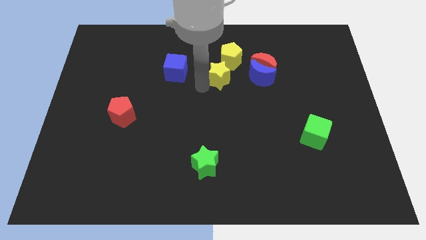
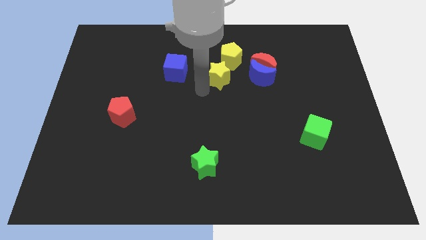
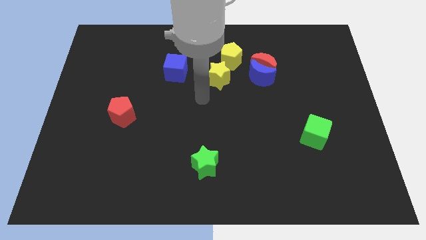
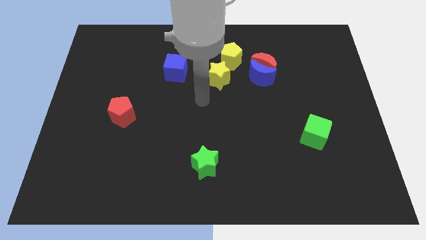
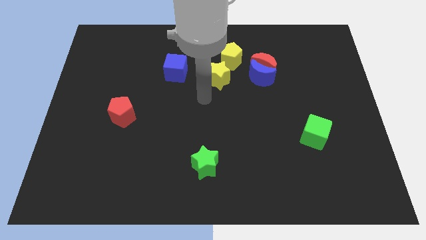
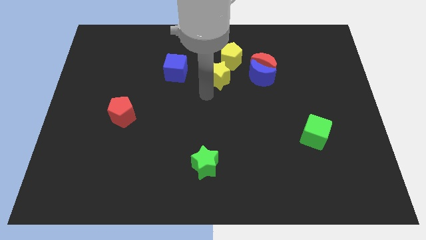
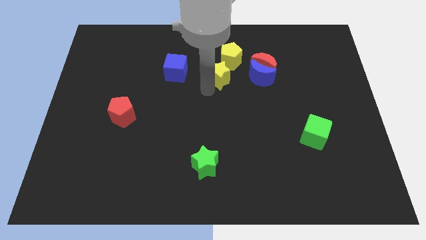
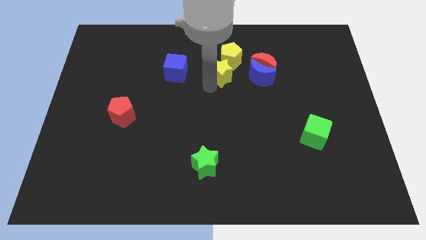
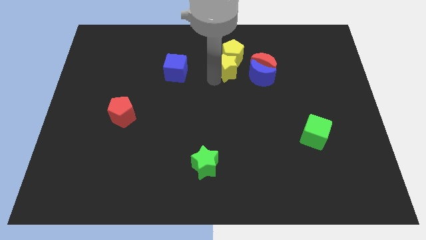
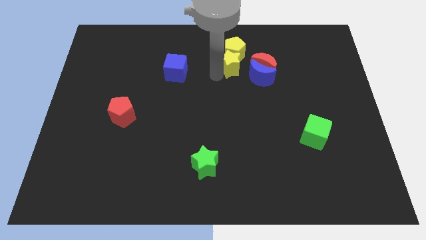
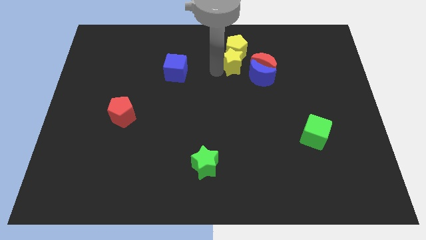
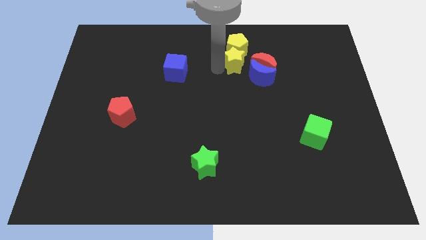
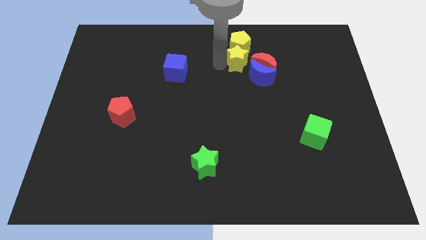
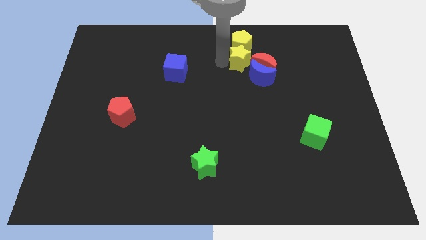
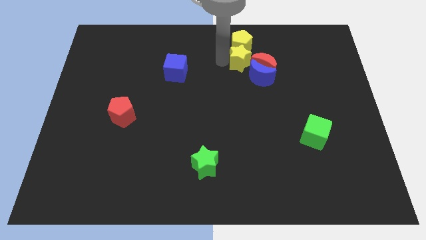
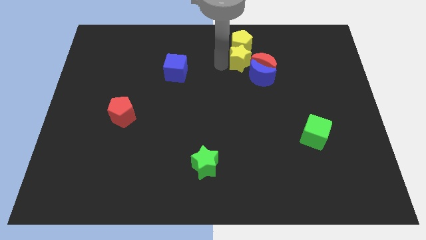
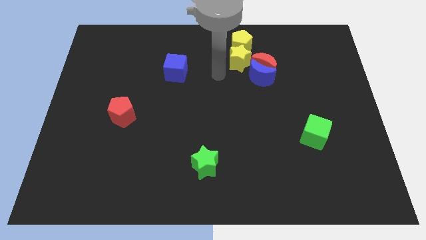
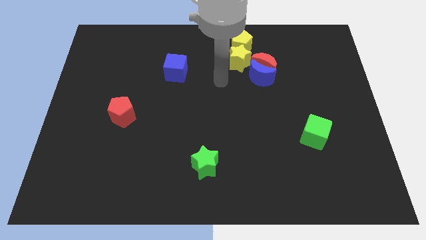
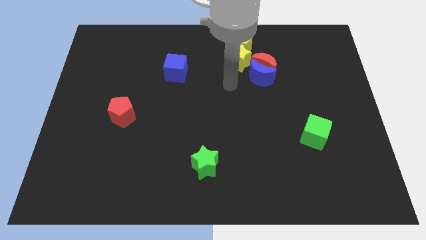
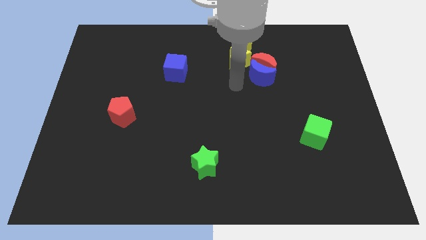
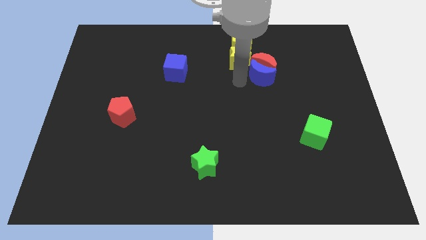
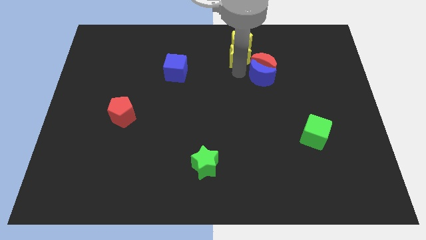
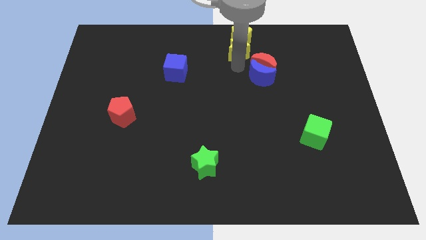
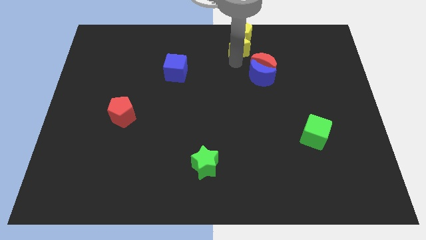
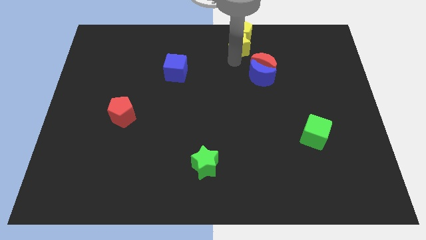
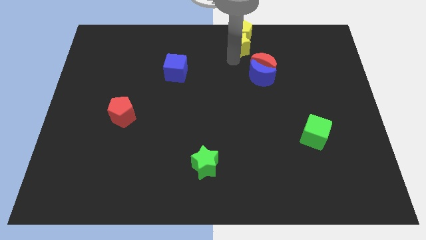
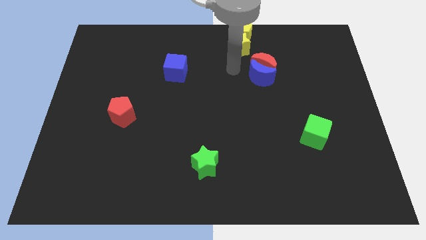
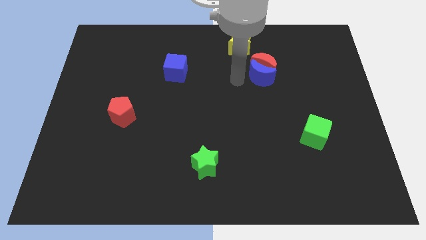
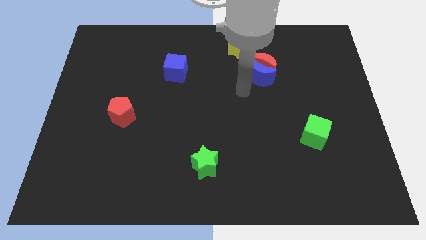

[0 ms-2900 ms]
group up the yellow blocks at the top center of the board

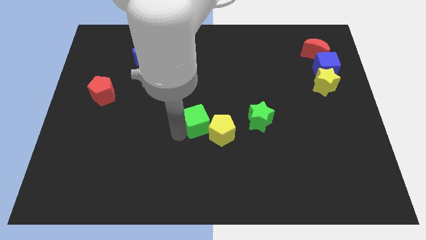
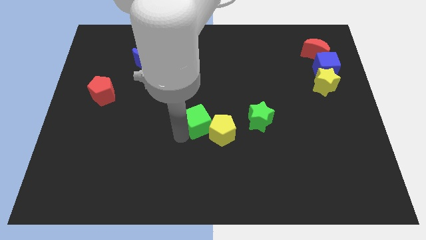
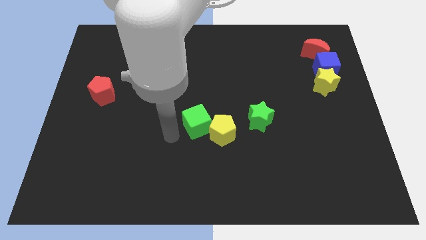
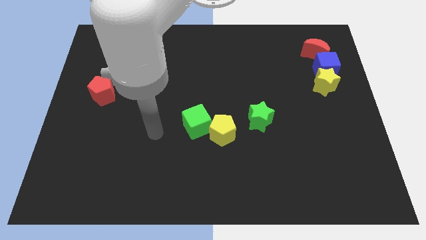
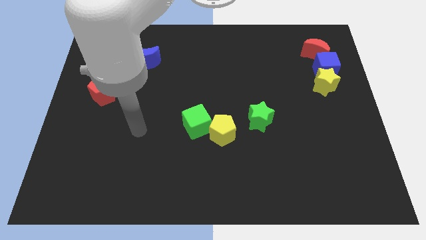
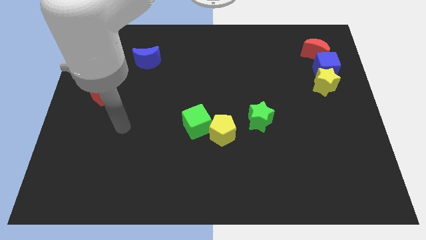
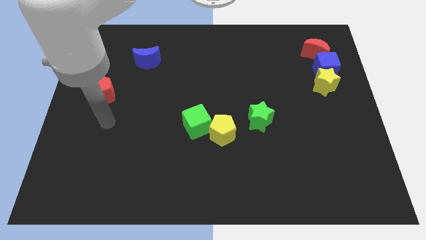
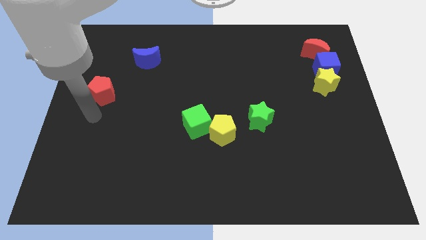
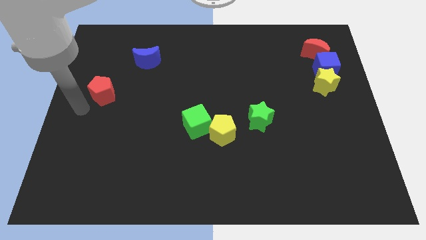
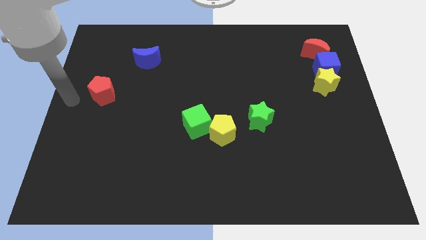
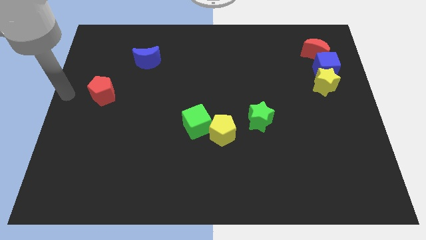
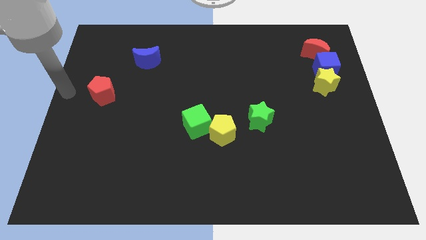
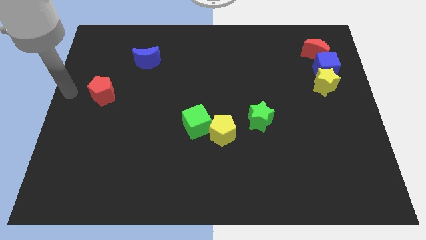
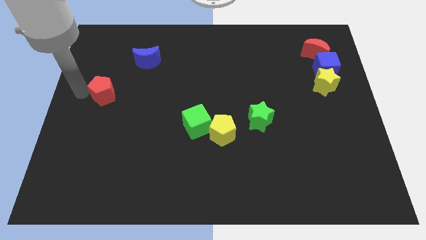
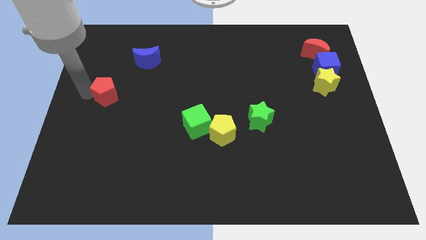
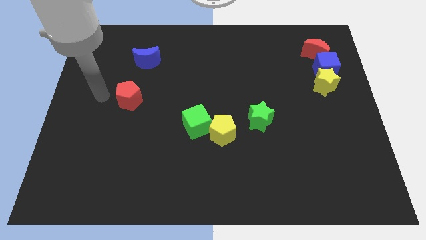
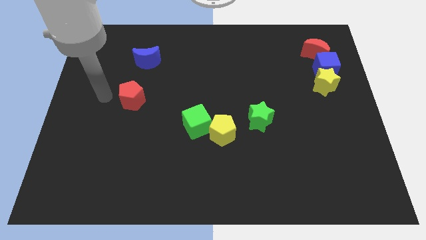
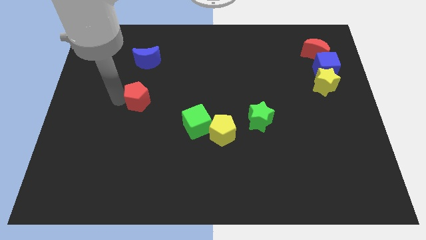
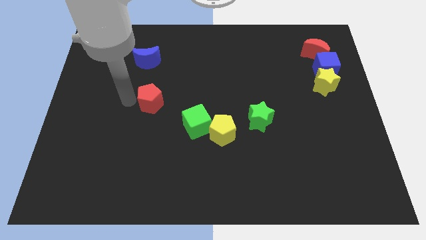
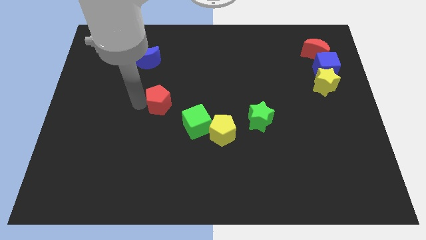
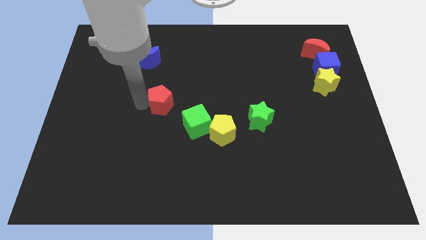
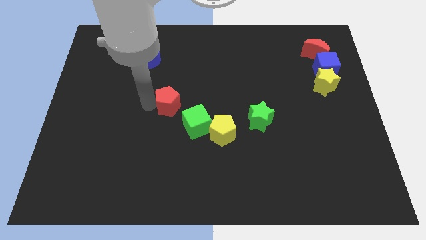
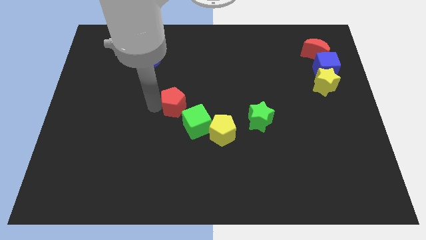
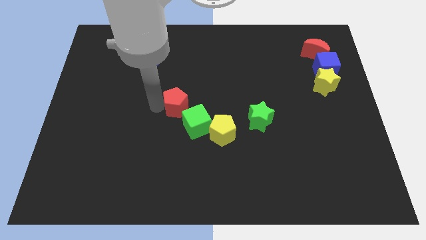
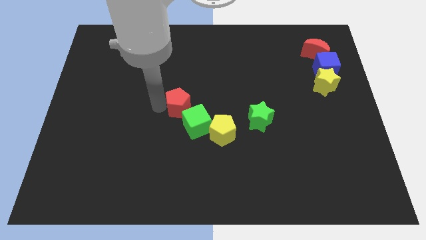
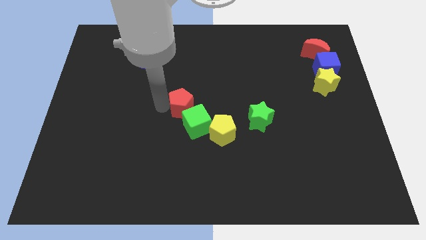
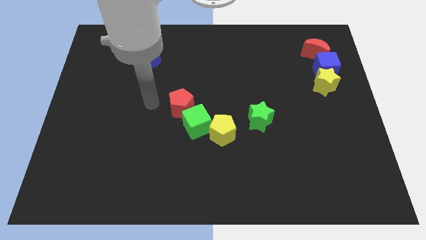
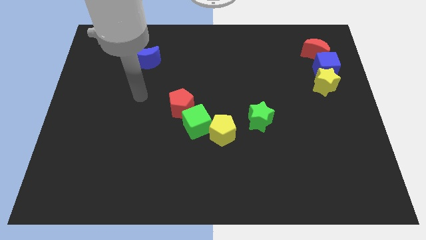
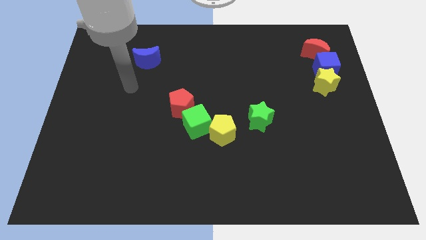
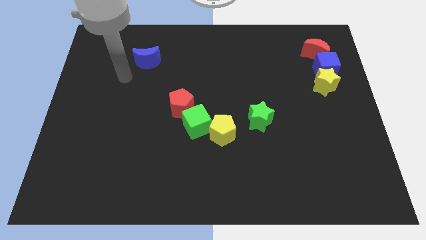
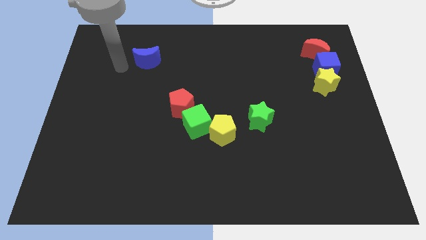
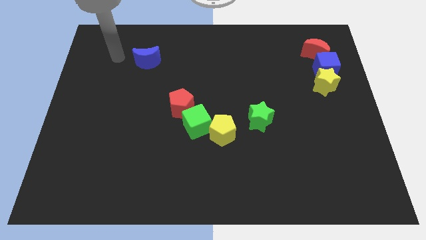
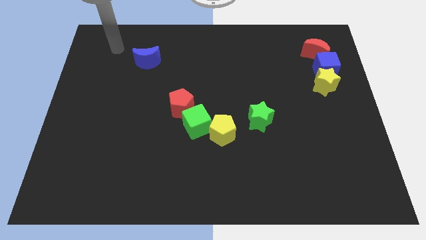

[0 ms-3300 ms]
move red pentagon near green cube

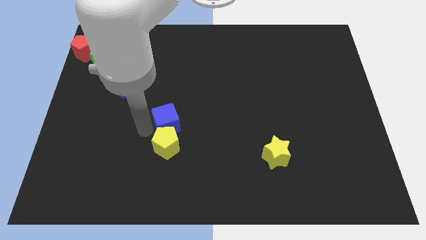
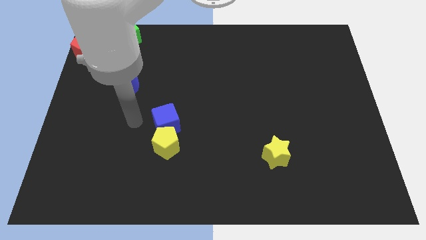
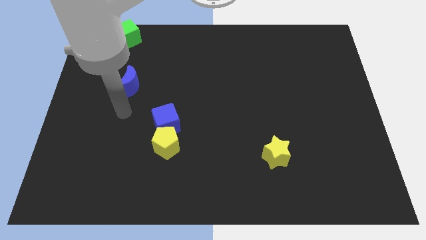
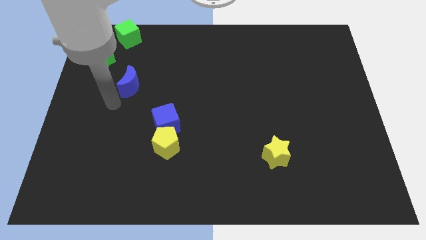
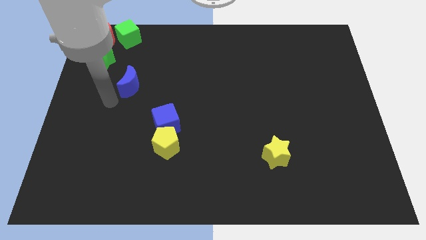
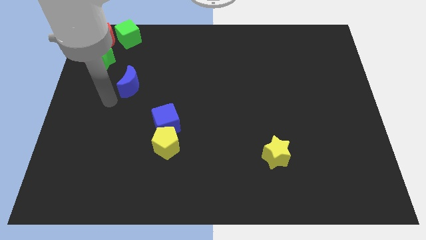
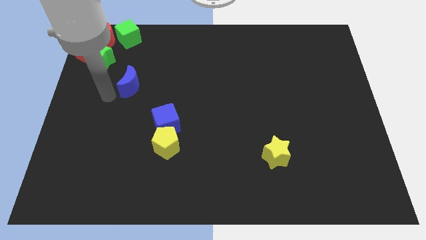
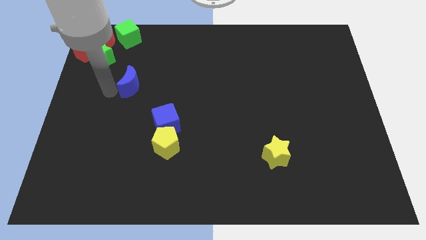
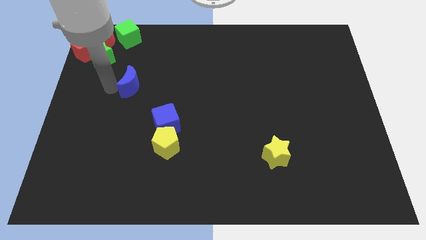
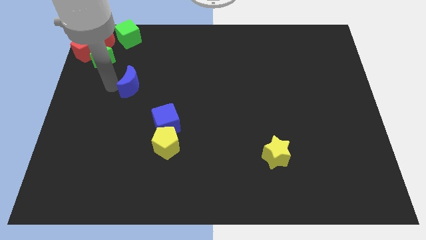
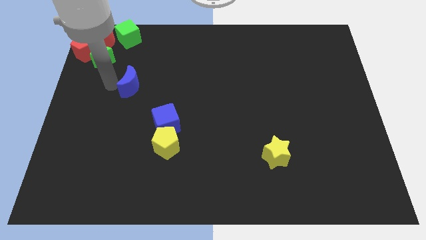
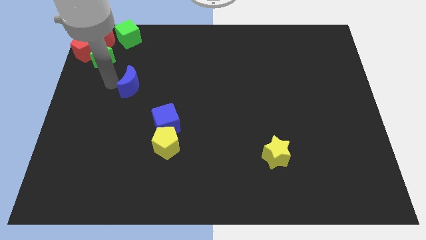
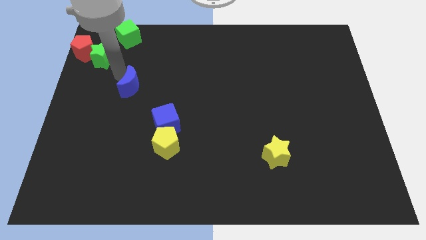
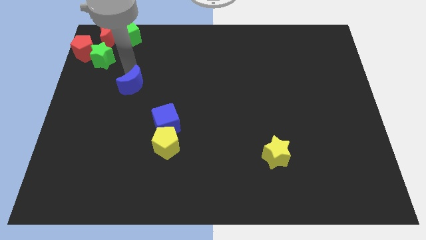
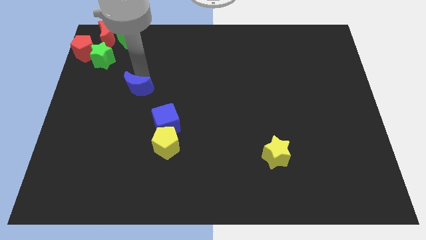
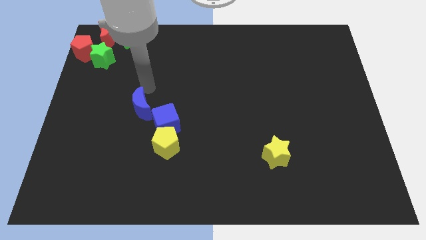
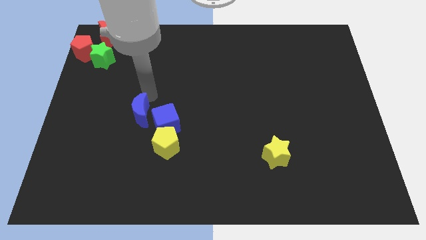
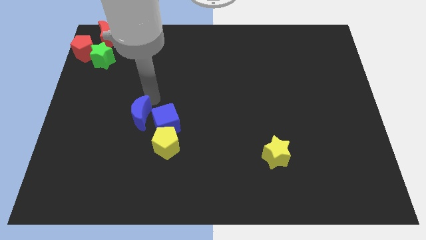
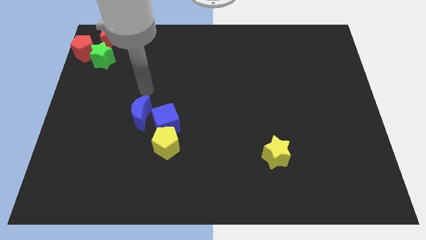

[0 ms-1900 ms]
drag the blue moon next to the blue cube

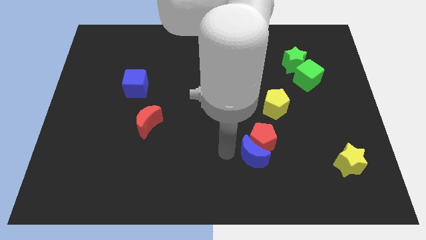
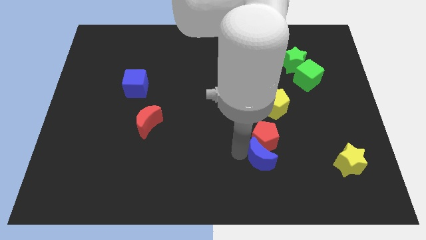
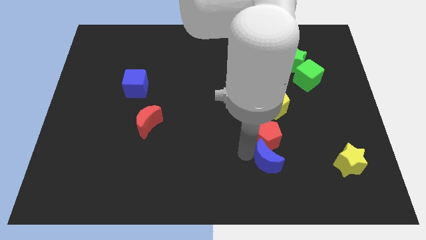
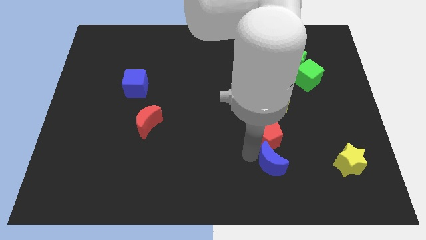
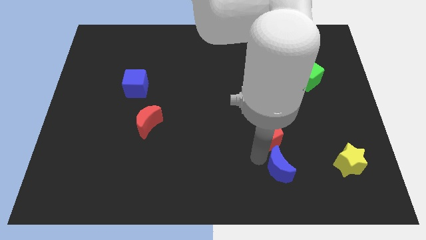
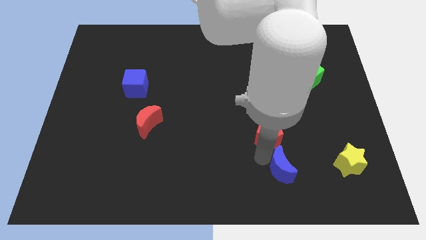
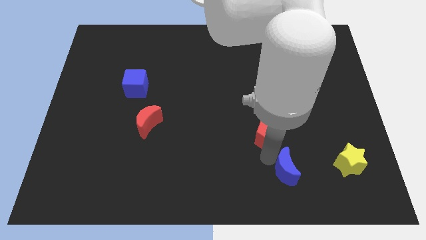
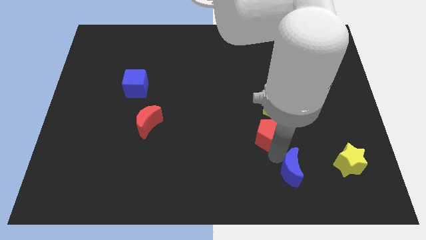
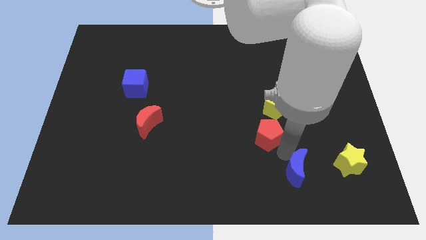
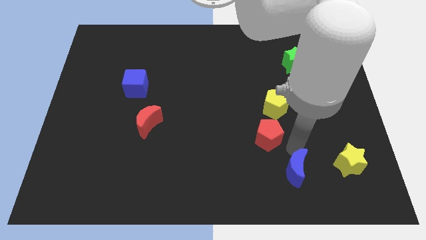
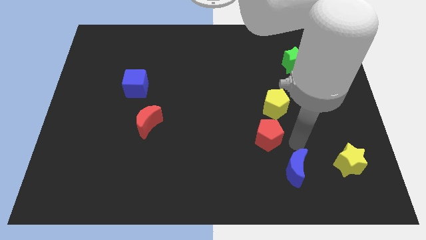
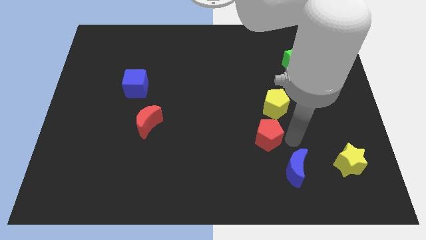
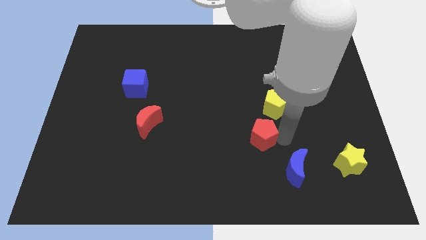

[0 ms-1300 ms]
separate the red pentagon from the blue moon
